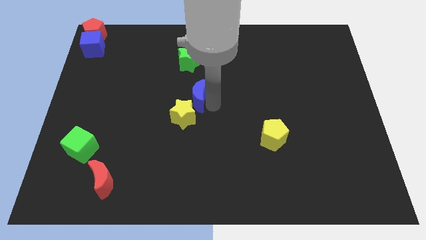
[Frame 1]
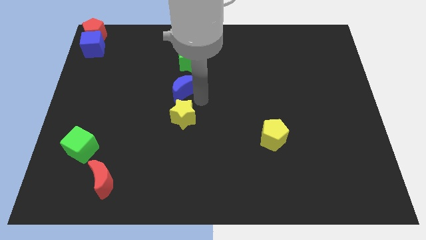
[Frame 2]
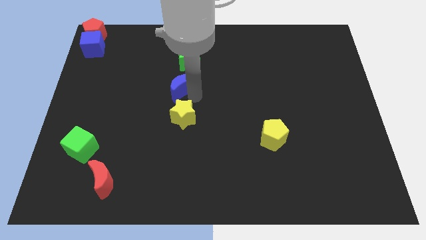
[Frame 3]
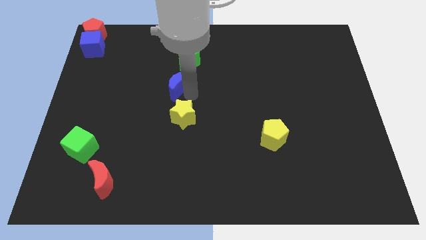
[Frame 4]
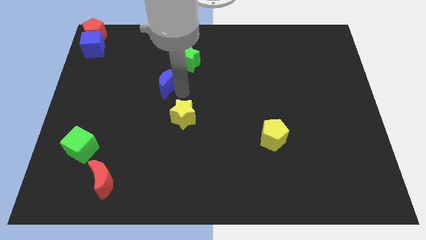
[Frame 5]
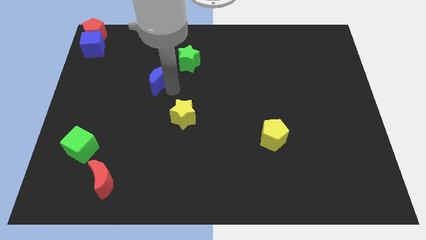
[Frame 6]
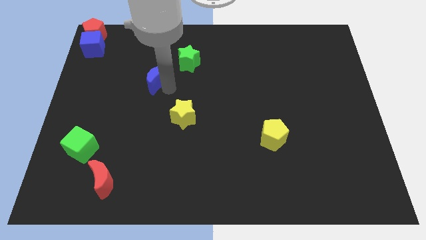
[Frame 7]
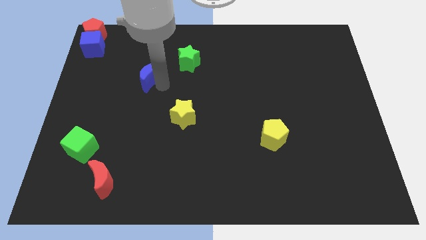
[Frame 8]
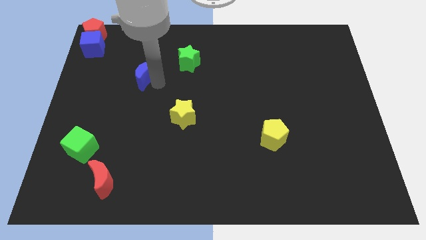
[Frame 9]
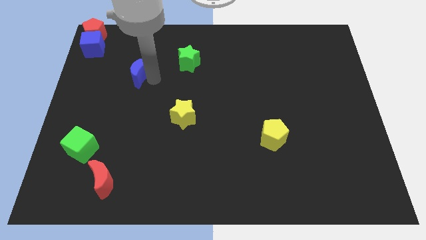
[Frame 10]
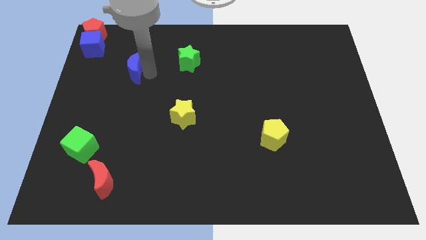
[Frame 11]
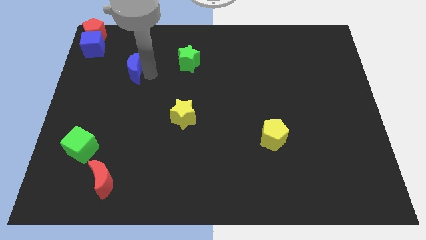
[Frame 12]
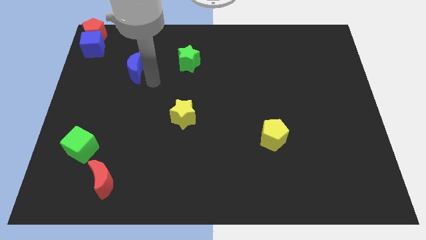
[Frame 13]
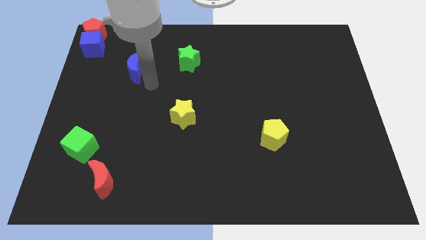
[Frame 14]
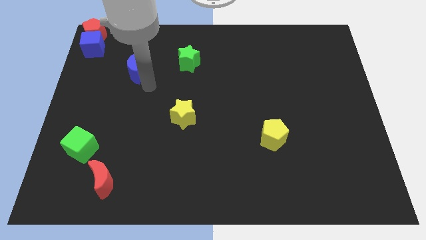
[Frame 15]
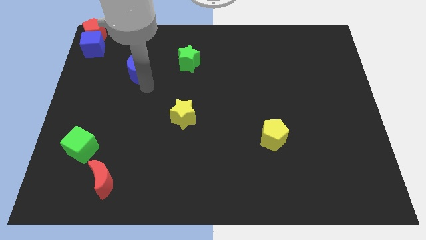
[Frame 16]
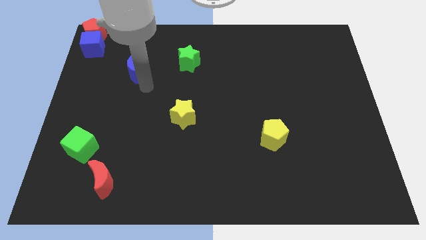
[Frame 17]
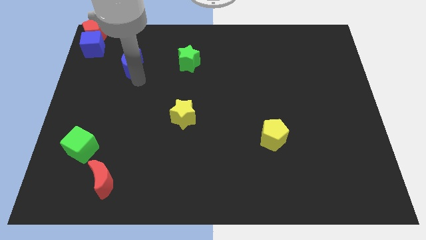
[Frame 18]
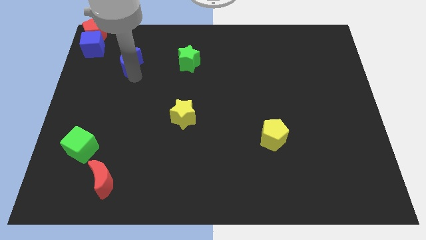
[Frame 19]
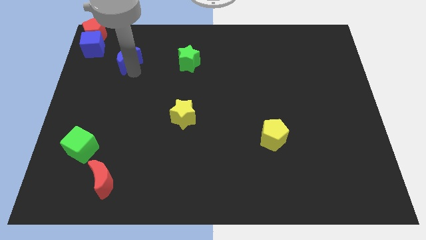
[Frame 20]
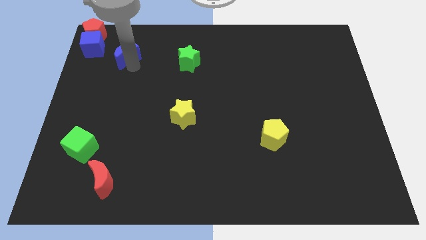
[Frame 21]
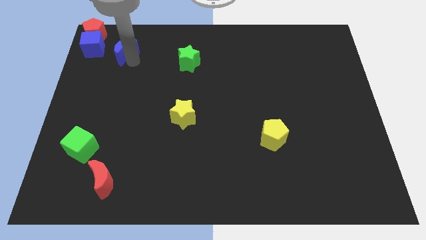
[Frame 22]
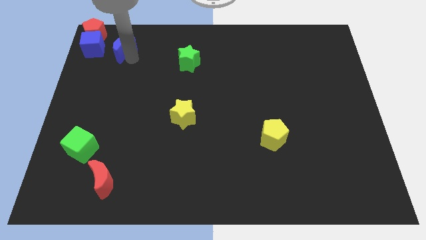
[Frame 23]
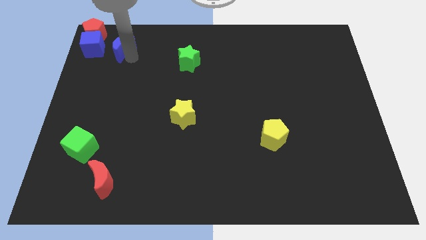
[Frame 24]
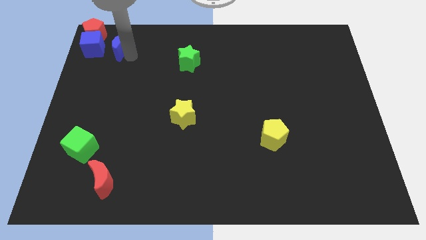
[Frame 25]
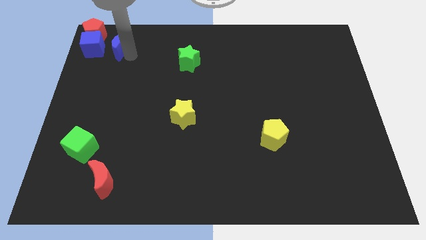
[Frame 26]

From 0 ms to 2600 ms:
move the blue crescent to the right of the blue cube

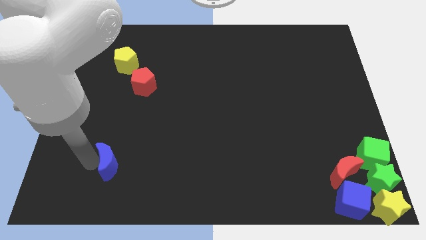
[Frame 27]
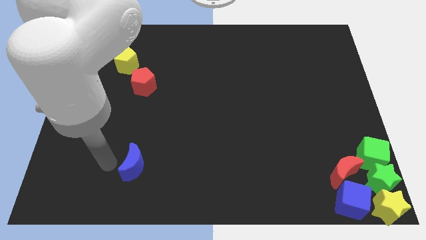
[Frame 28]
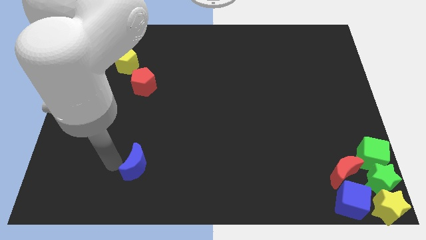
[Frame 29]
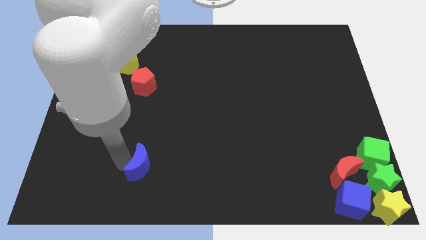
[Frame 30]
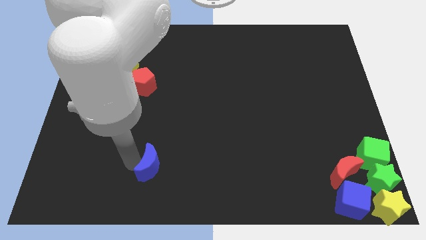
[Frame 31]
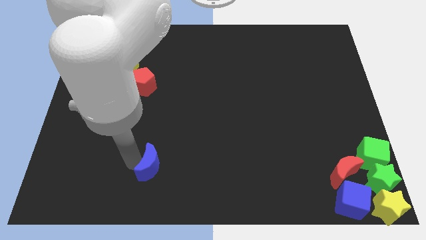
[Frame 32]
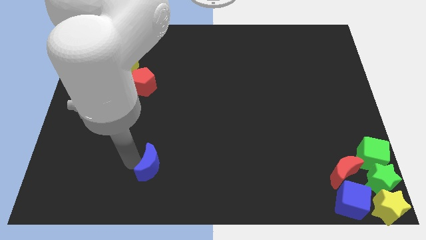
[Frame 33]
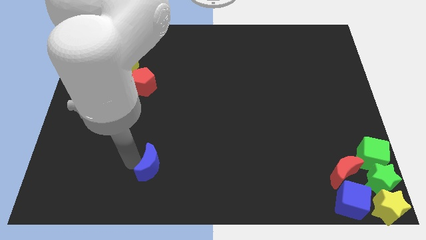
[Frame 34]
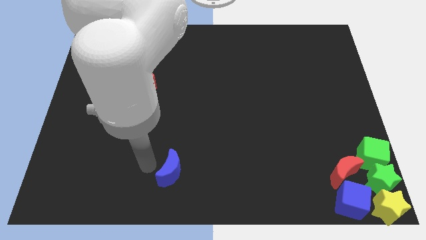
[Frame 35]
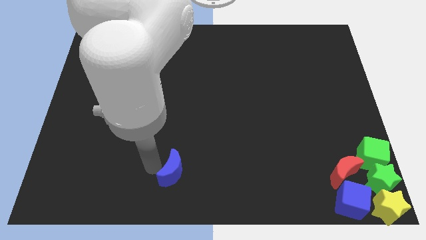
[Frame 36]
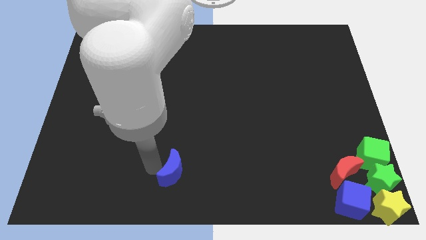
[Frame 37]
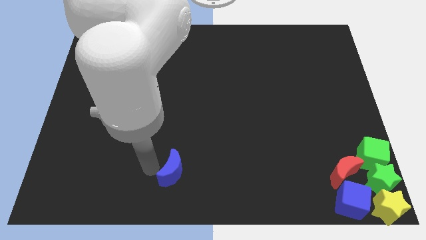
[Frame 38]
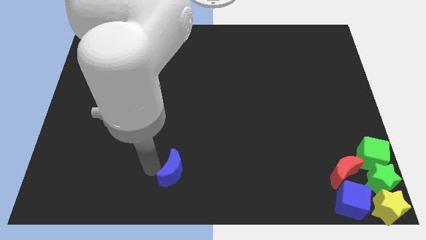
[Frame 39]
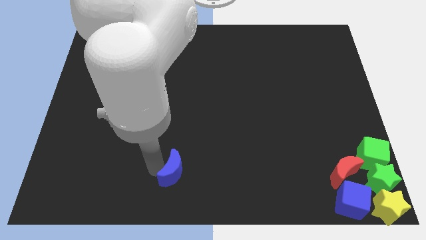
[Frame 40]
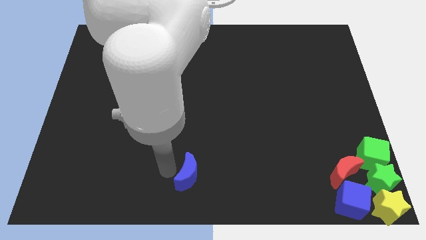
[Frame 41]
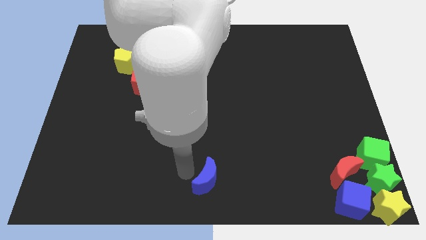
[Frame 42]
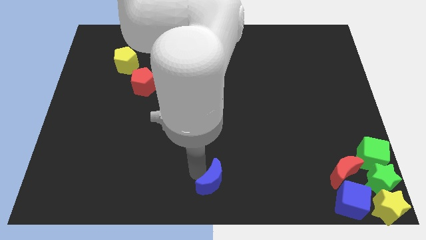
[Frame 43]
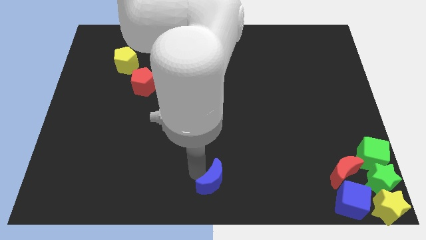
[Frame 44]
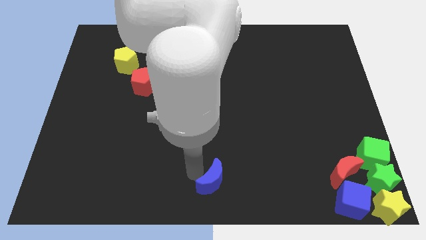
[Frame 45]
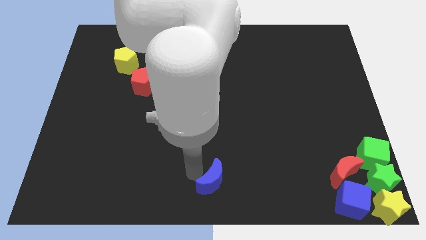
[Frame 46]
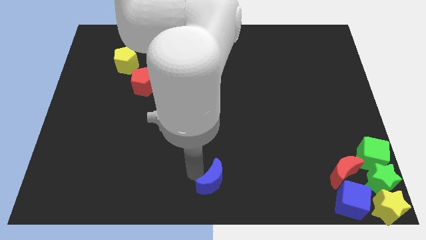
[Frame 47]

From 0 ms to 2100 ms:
move blue moon to the bottom center of the board

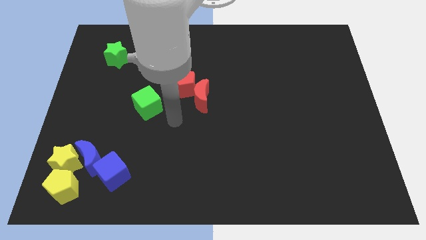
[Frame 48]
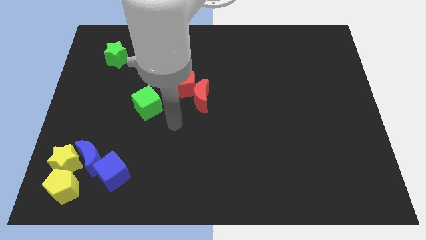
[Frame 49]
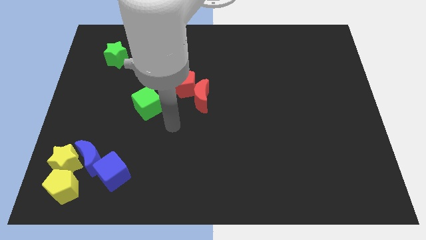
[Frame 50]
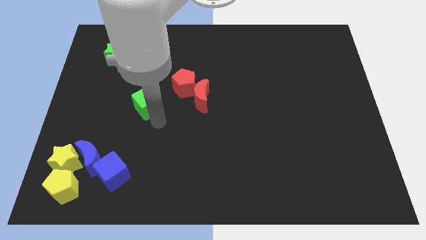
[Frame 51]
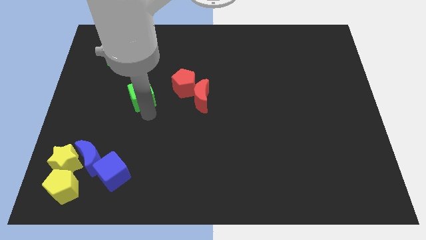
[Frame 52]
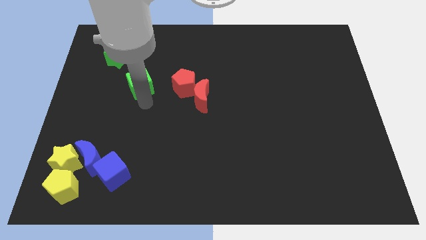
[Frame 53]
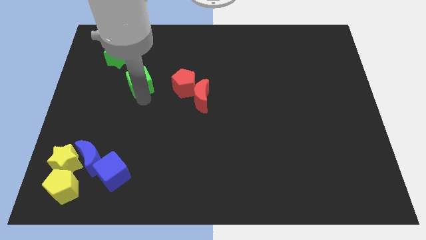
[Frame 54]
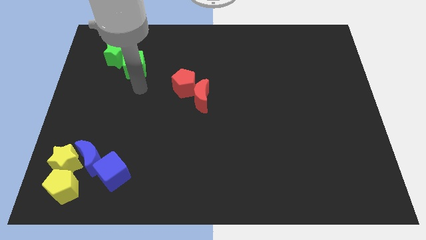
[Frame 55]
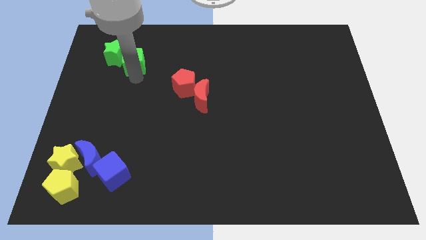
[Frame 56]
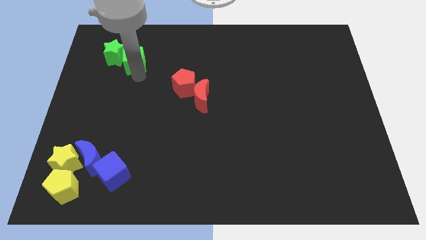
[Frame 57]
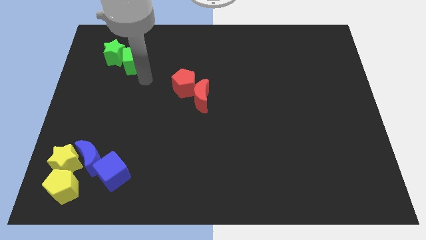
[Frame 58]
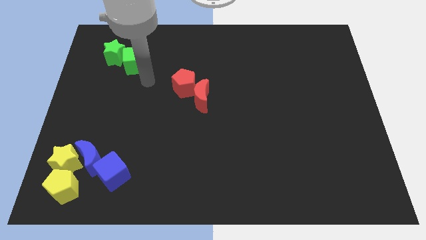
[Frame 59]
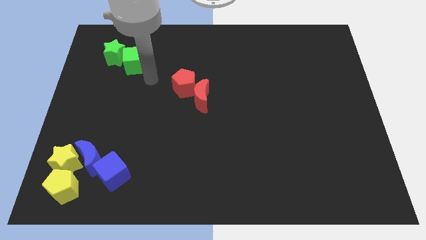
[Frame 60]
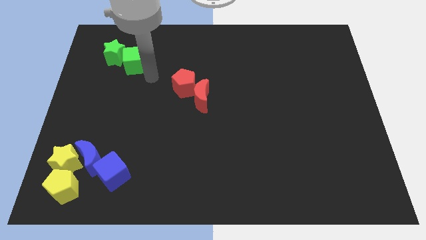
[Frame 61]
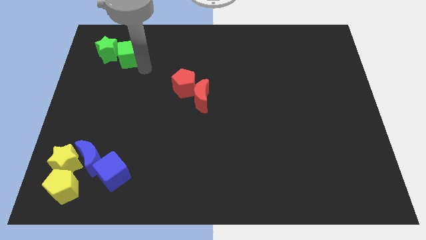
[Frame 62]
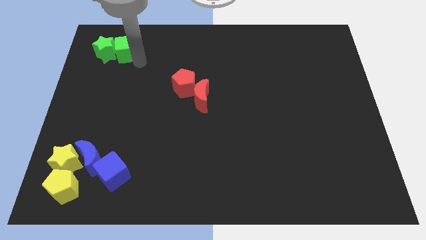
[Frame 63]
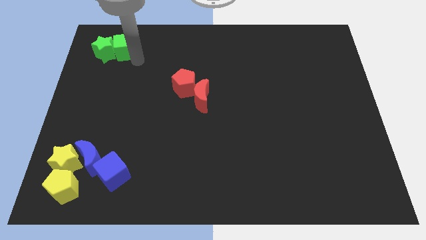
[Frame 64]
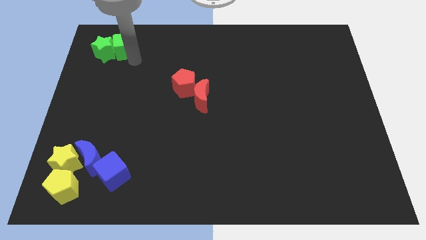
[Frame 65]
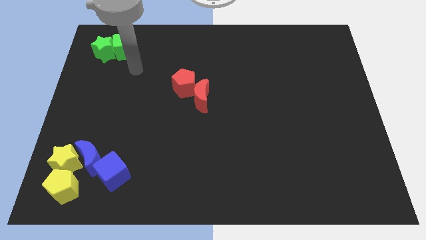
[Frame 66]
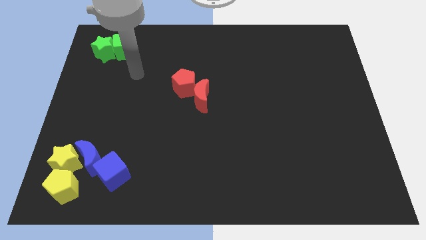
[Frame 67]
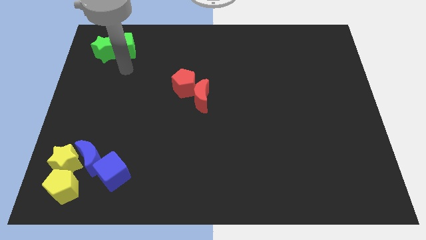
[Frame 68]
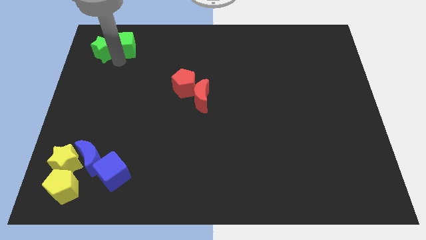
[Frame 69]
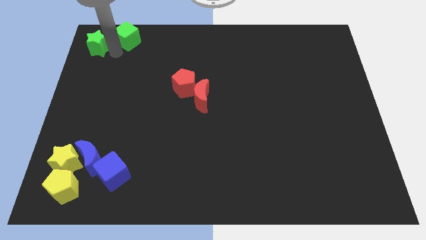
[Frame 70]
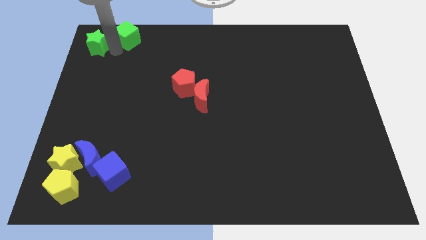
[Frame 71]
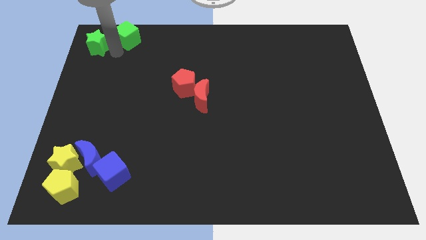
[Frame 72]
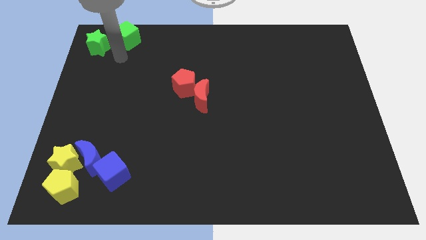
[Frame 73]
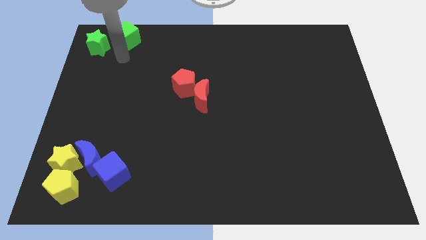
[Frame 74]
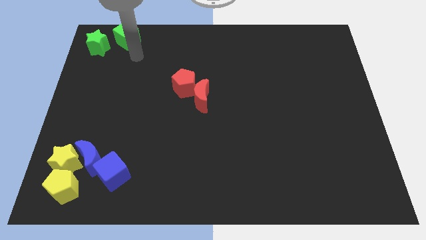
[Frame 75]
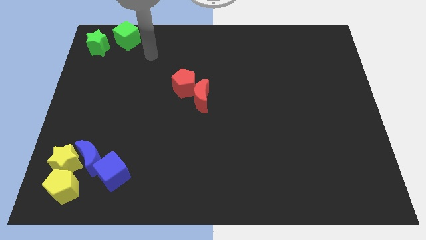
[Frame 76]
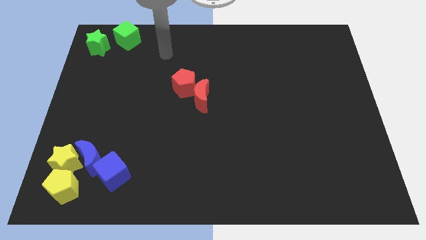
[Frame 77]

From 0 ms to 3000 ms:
drag the green blocks towards the top left corner of the board

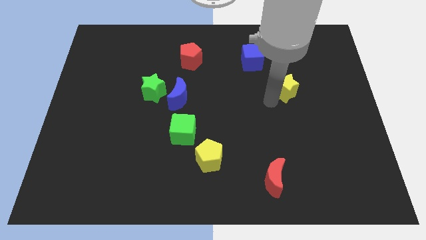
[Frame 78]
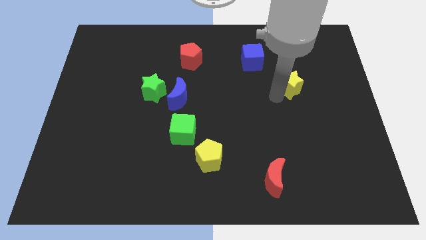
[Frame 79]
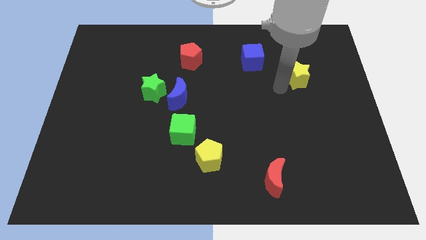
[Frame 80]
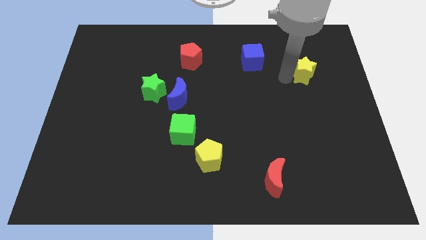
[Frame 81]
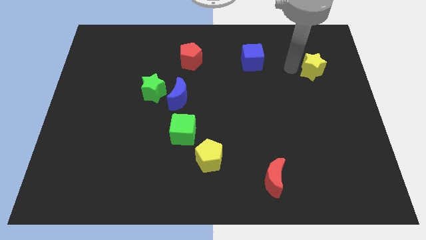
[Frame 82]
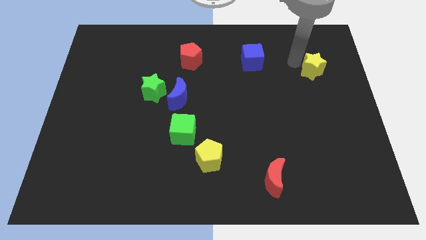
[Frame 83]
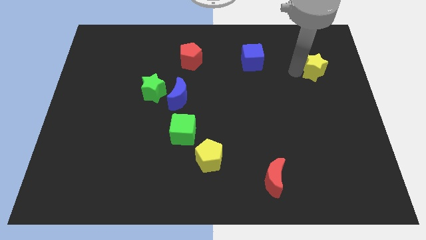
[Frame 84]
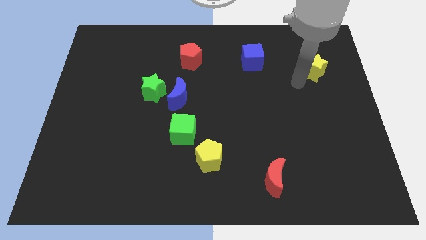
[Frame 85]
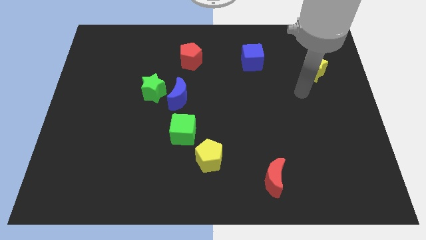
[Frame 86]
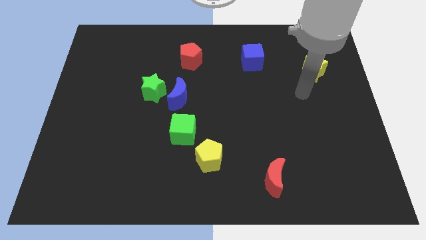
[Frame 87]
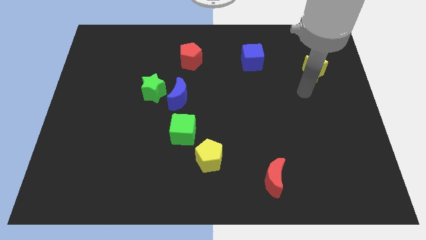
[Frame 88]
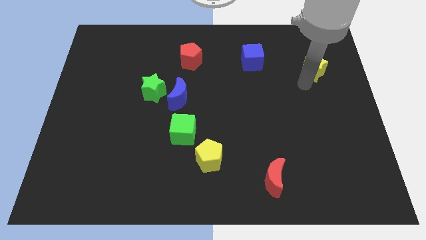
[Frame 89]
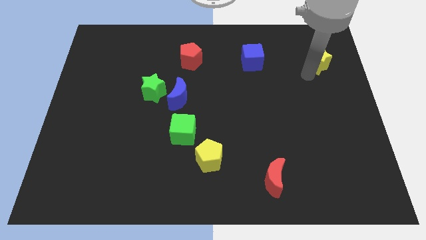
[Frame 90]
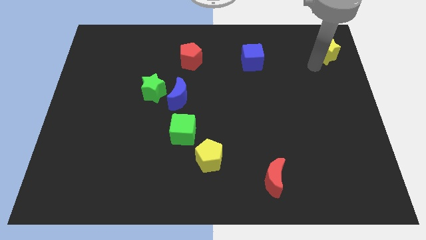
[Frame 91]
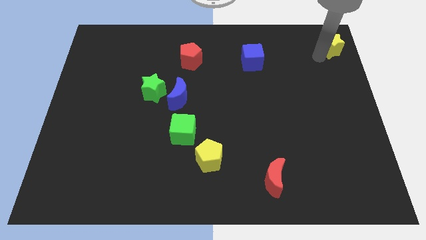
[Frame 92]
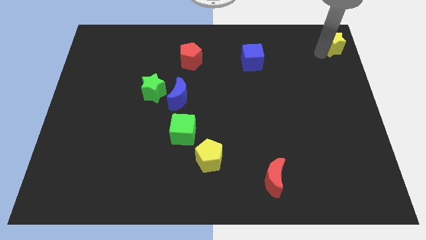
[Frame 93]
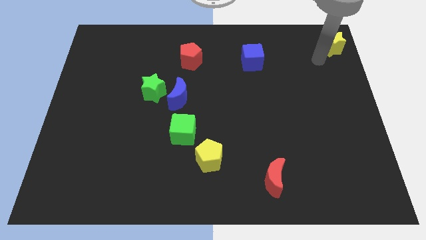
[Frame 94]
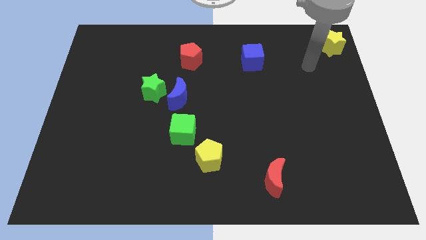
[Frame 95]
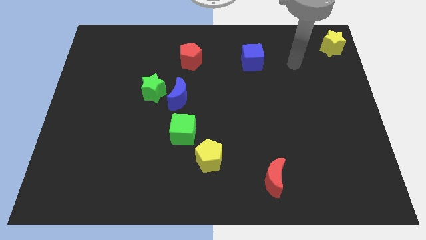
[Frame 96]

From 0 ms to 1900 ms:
move yellow star to top right corner of the board
